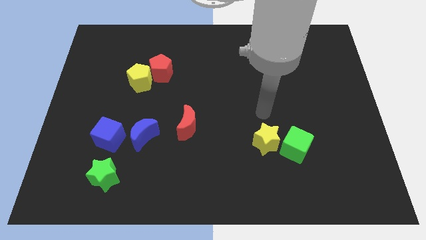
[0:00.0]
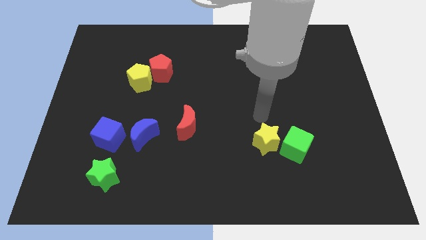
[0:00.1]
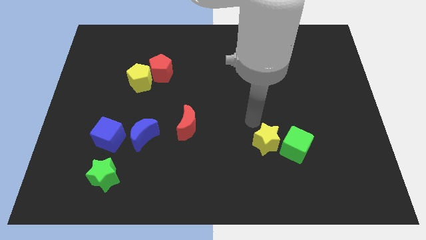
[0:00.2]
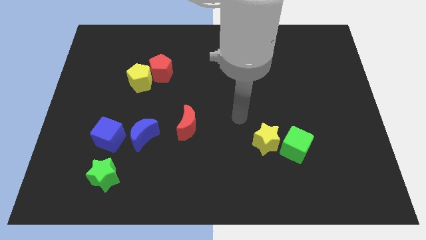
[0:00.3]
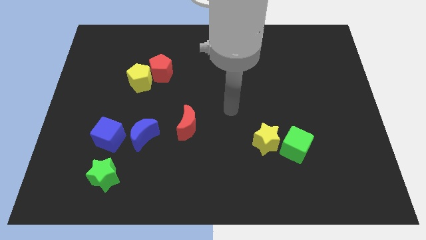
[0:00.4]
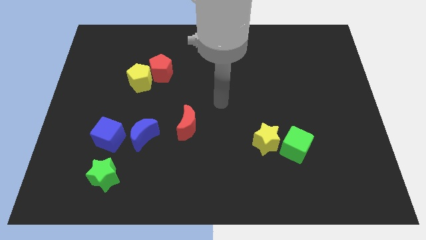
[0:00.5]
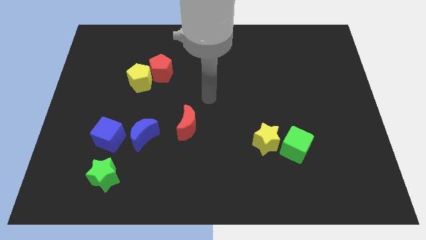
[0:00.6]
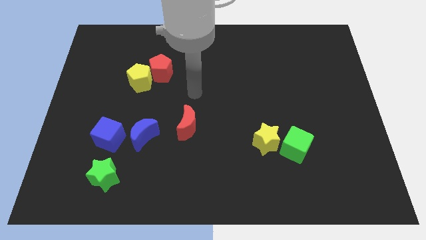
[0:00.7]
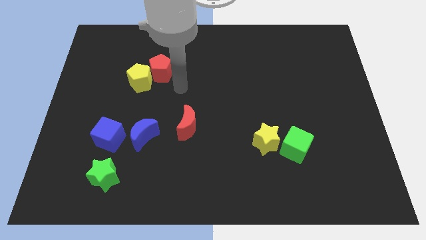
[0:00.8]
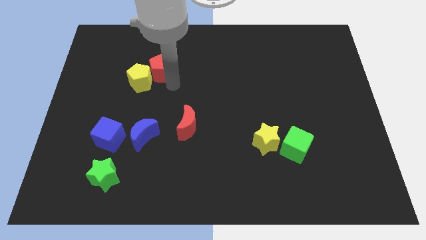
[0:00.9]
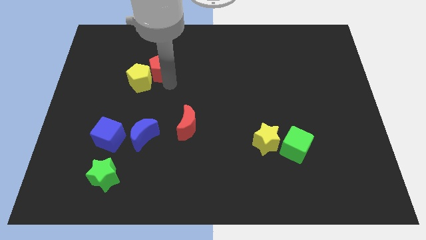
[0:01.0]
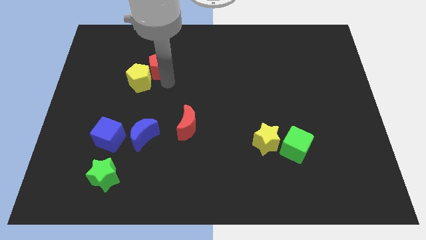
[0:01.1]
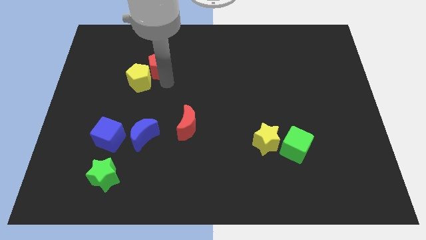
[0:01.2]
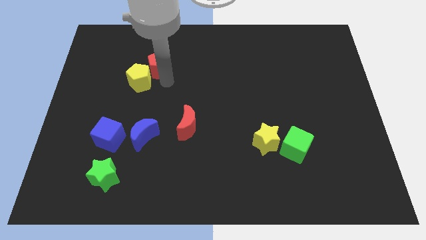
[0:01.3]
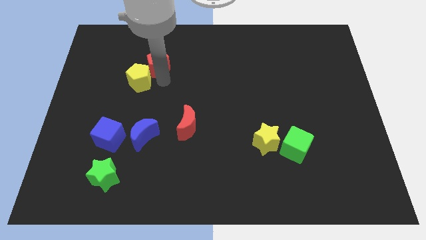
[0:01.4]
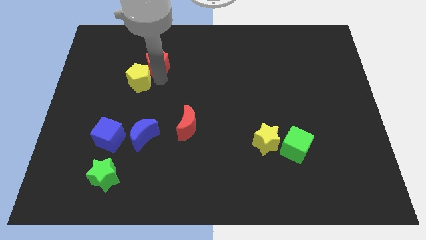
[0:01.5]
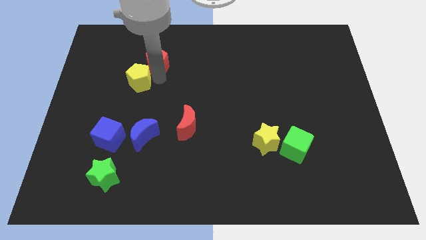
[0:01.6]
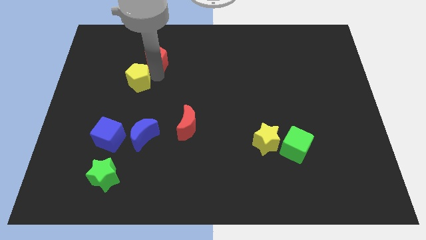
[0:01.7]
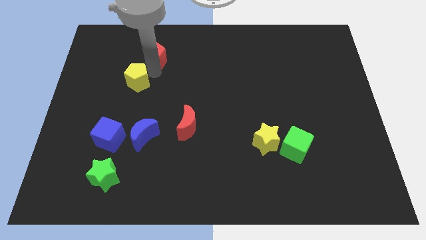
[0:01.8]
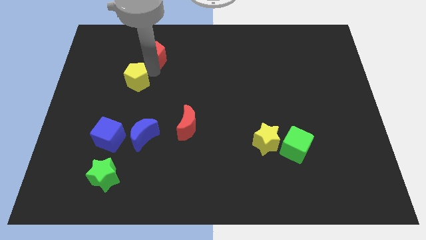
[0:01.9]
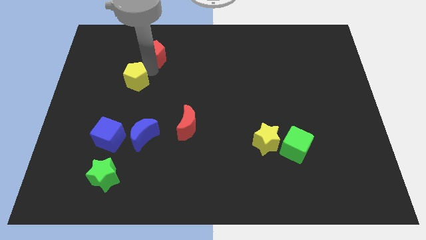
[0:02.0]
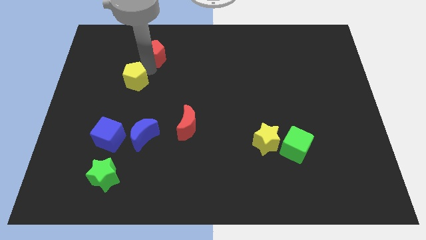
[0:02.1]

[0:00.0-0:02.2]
separate the red and yellow pentagons

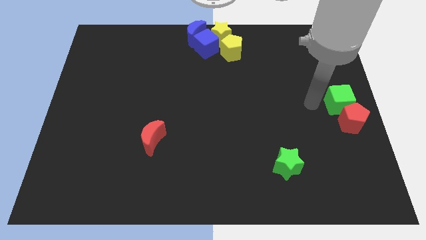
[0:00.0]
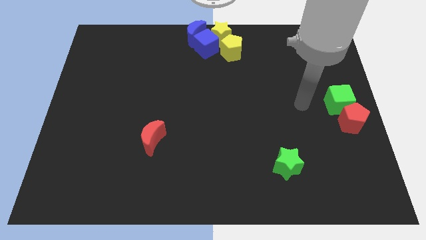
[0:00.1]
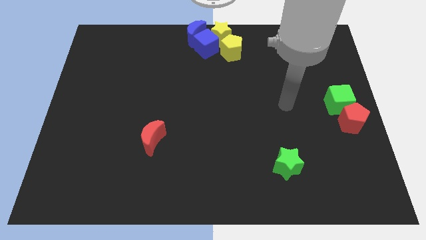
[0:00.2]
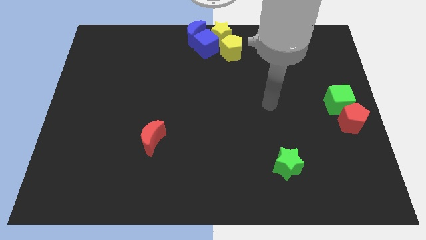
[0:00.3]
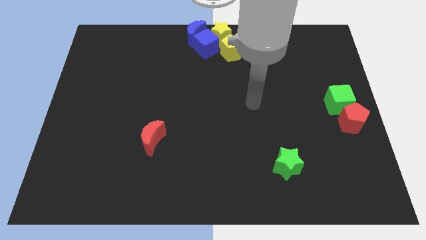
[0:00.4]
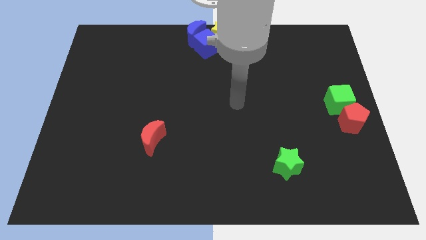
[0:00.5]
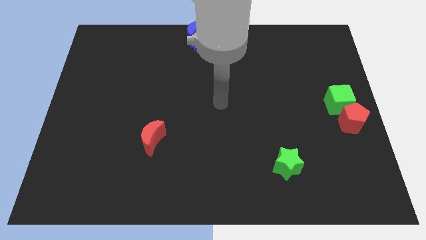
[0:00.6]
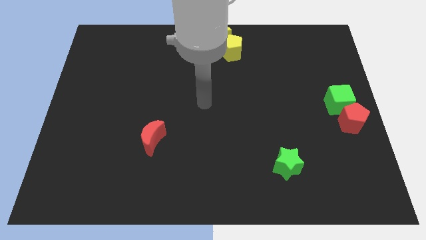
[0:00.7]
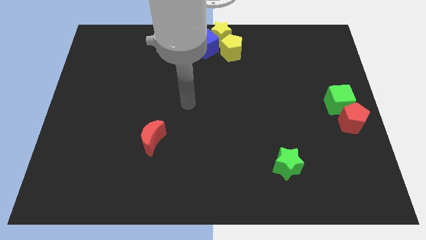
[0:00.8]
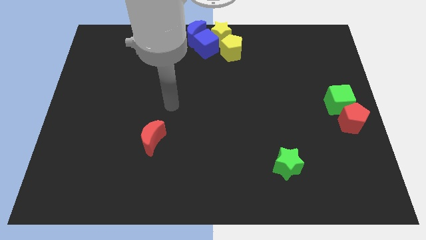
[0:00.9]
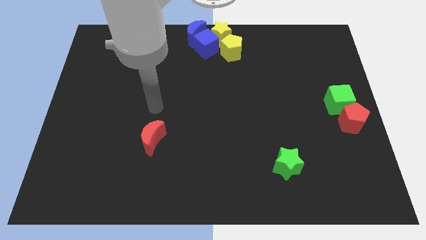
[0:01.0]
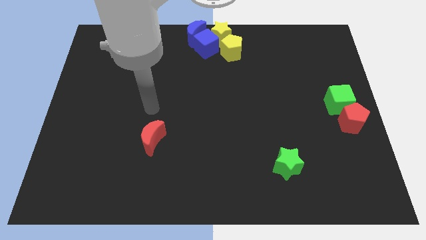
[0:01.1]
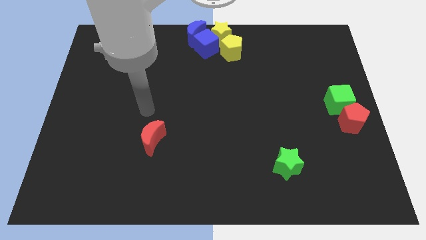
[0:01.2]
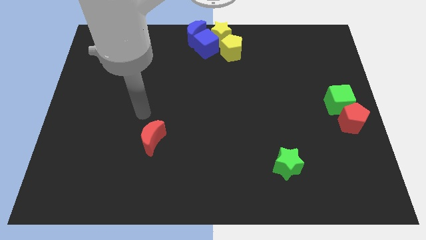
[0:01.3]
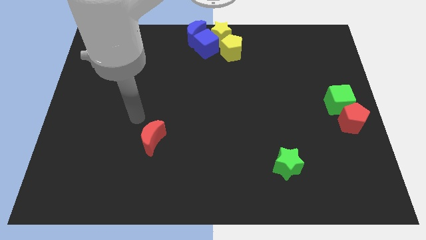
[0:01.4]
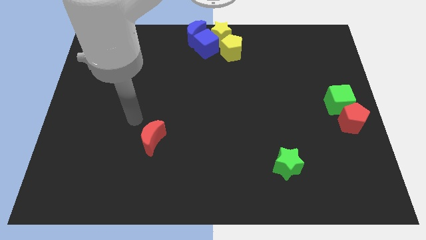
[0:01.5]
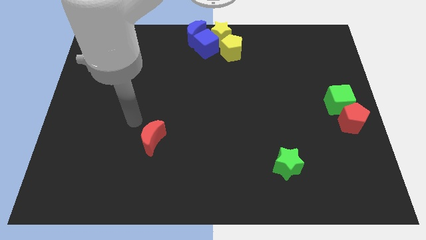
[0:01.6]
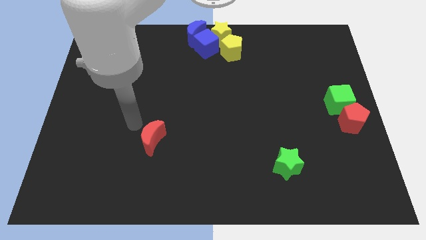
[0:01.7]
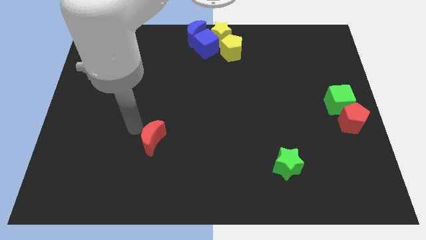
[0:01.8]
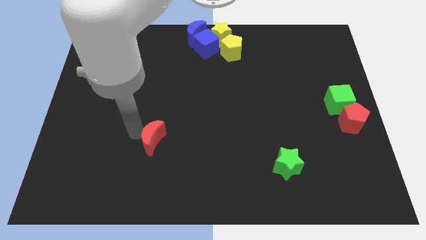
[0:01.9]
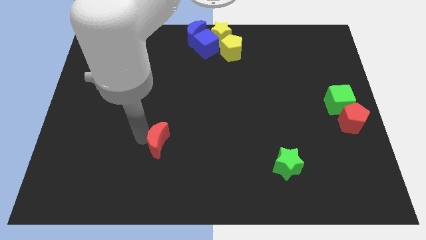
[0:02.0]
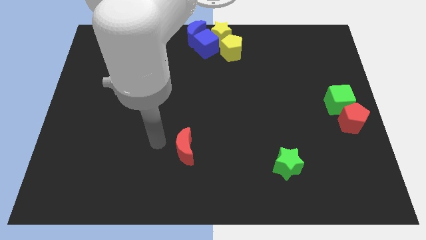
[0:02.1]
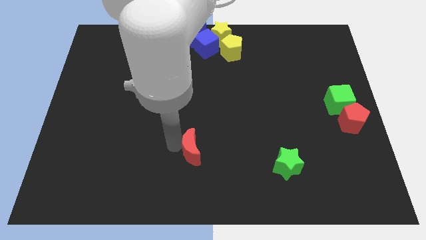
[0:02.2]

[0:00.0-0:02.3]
move your arm towards the red crescent

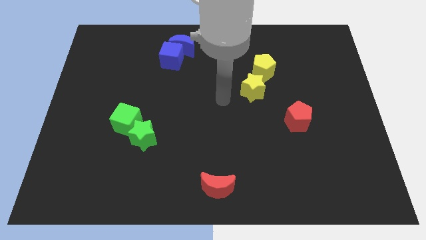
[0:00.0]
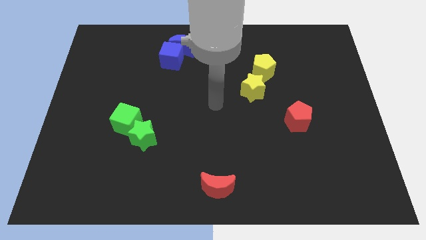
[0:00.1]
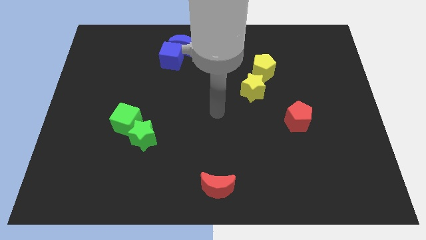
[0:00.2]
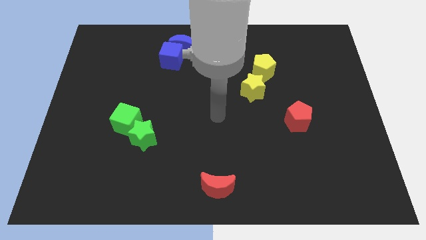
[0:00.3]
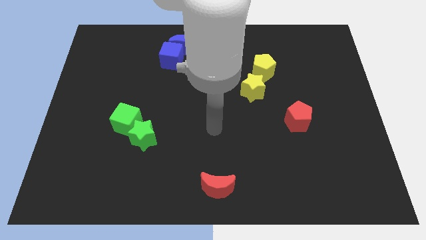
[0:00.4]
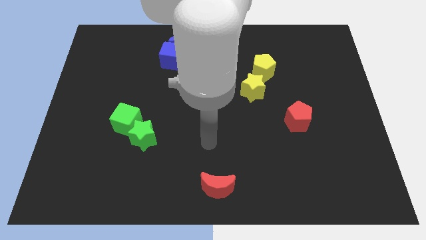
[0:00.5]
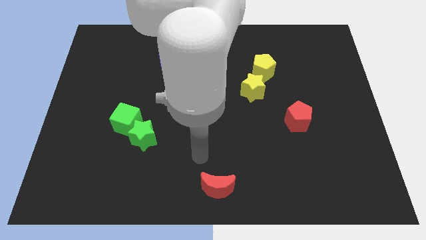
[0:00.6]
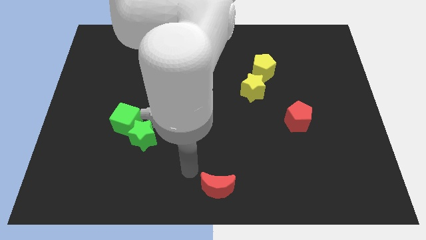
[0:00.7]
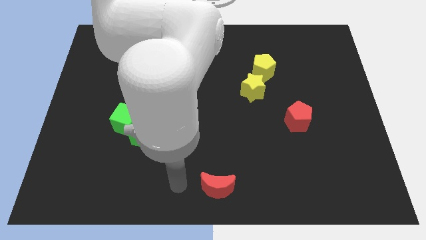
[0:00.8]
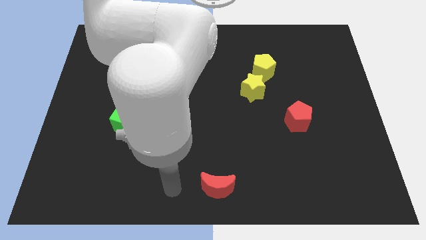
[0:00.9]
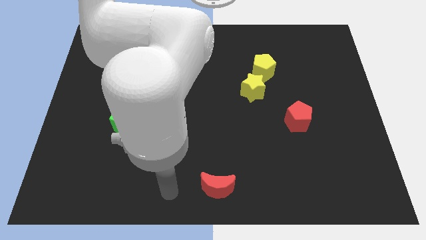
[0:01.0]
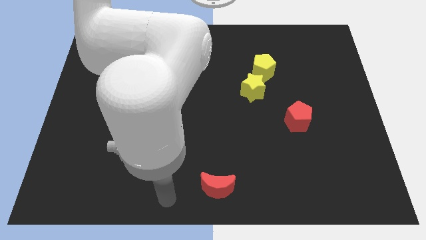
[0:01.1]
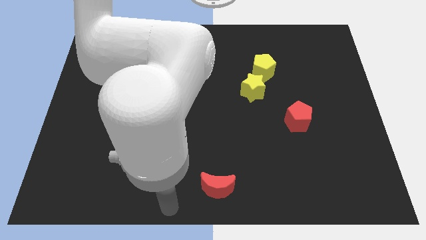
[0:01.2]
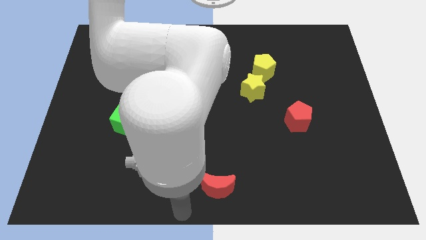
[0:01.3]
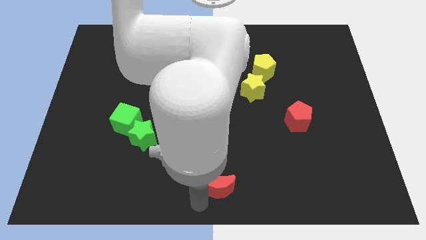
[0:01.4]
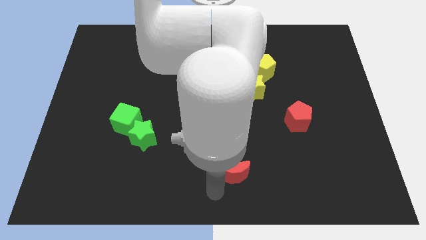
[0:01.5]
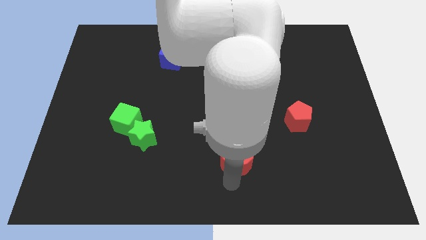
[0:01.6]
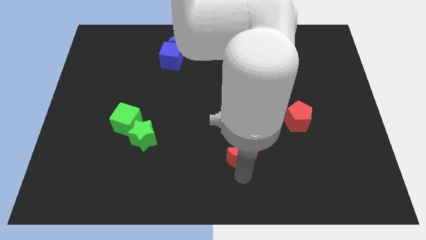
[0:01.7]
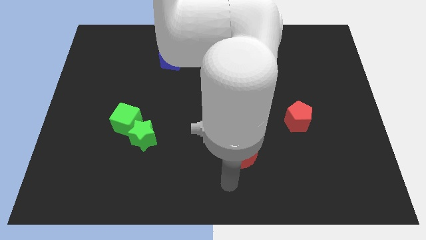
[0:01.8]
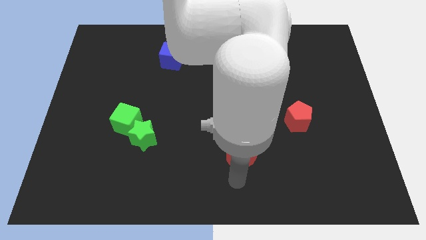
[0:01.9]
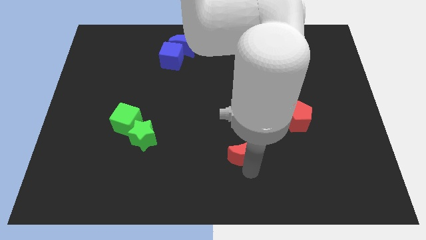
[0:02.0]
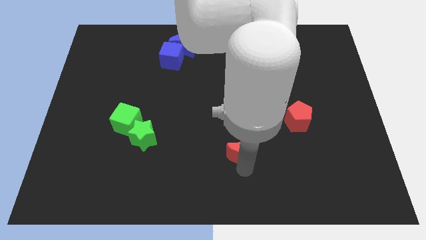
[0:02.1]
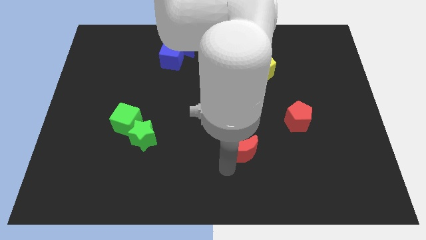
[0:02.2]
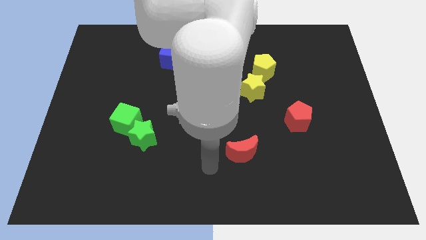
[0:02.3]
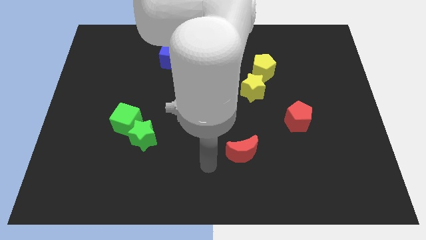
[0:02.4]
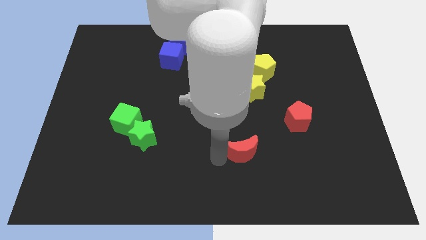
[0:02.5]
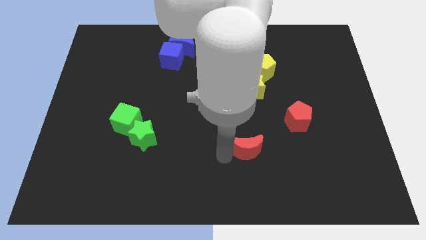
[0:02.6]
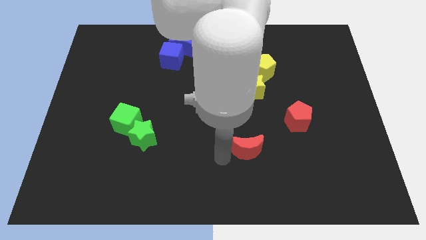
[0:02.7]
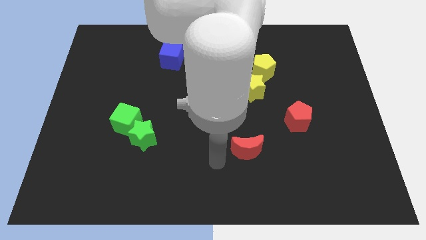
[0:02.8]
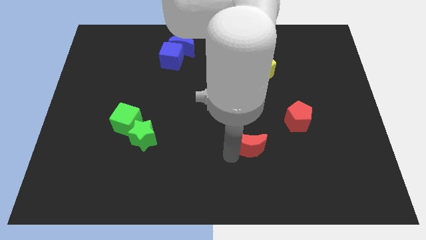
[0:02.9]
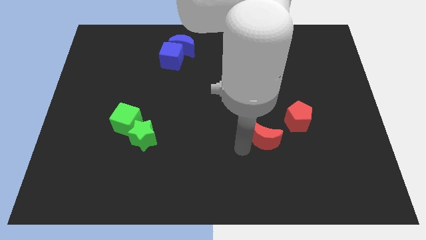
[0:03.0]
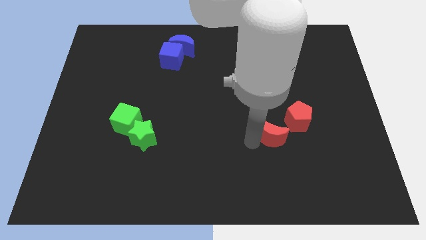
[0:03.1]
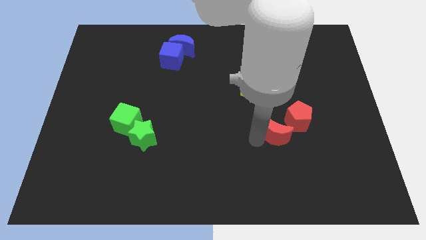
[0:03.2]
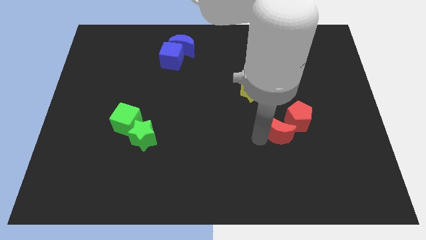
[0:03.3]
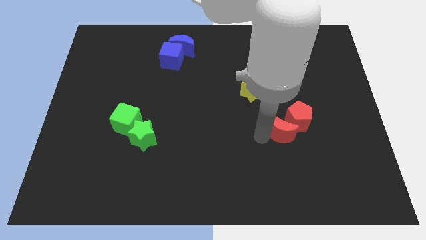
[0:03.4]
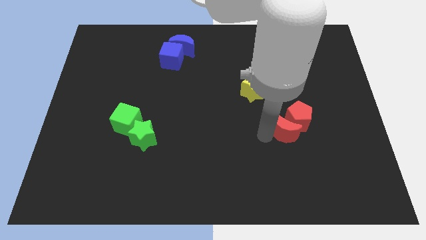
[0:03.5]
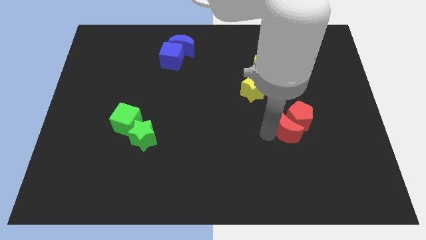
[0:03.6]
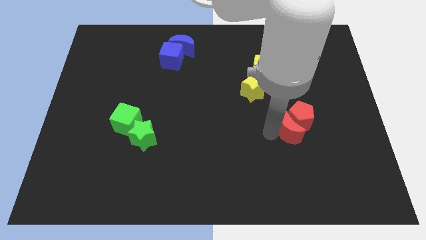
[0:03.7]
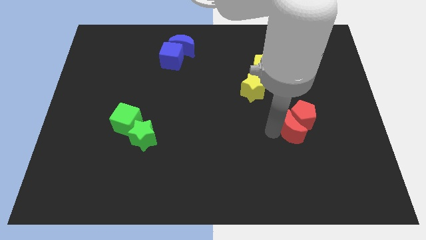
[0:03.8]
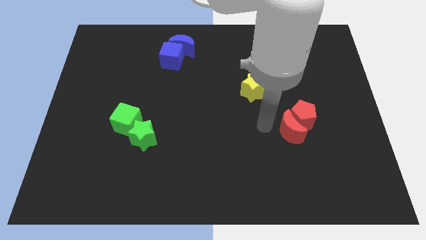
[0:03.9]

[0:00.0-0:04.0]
push the red crescent into the red pentagon

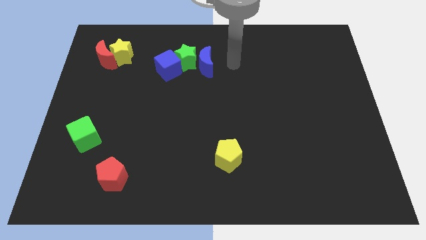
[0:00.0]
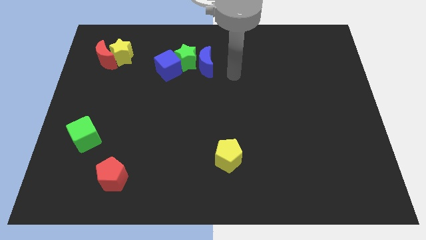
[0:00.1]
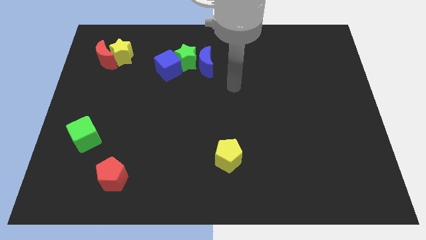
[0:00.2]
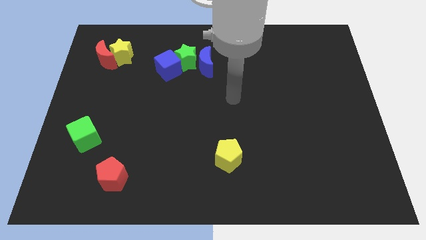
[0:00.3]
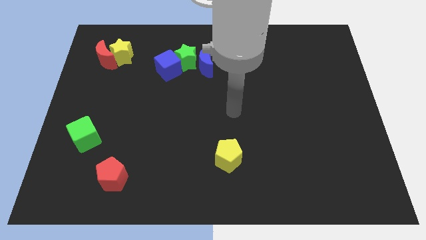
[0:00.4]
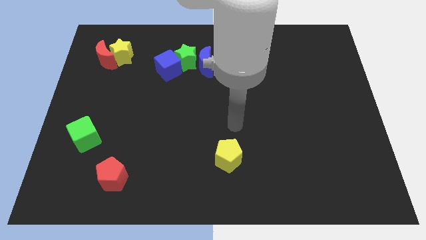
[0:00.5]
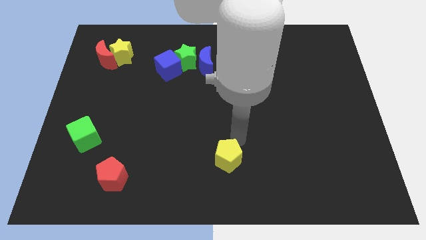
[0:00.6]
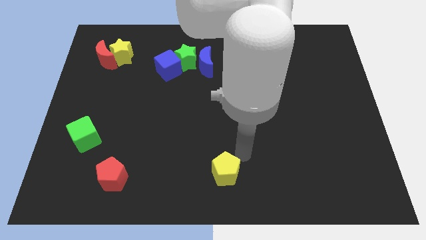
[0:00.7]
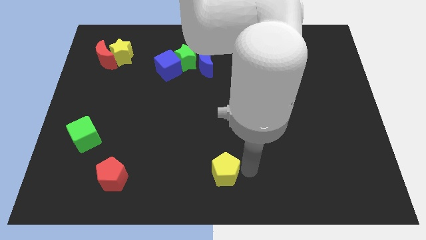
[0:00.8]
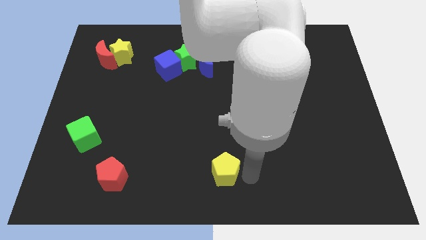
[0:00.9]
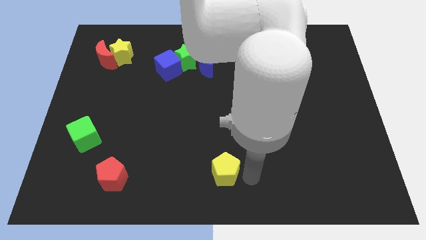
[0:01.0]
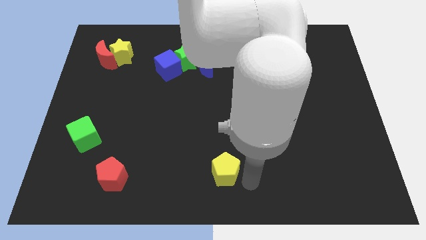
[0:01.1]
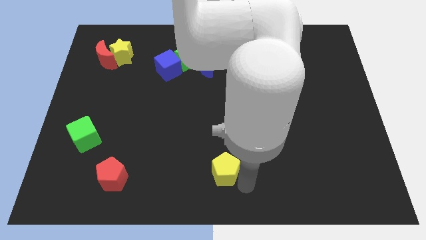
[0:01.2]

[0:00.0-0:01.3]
adjust the yellow pentagon horizontally to the right of the red pentagon
